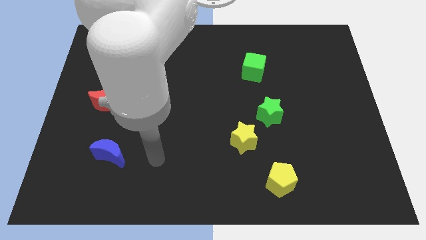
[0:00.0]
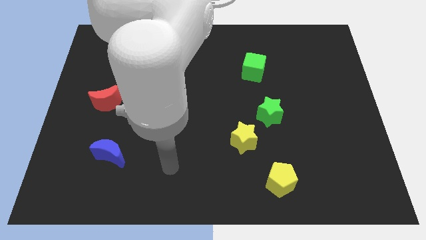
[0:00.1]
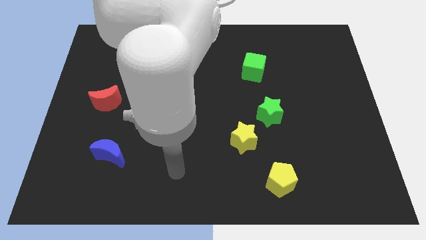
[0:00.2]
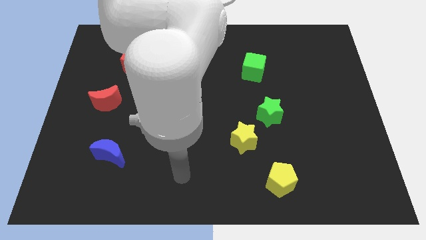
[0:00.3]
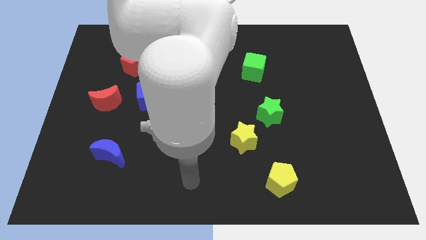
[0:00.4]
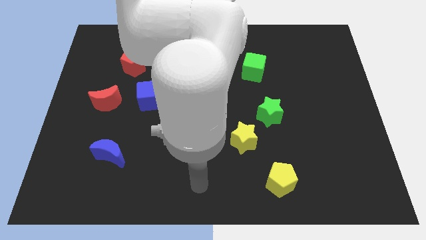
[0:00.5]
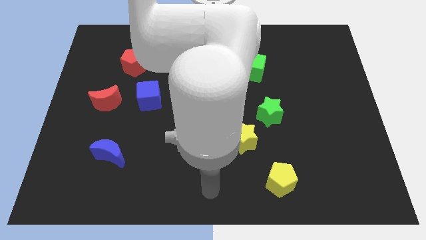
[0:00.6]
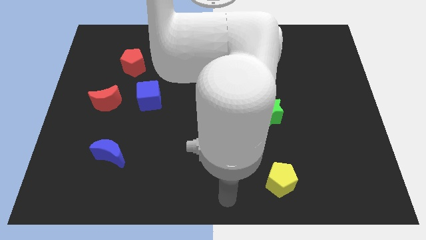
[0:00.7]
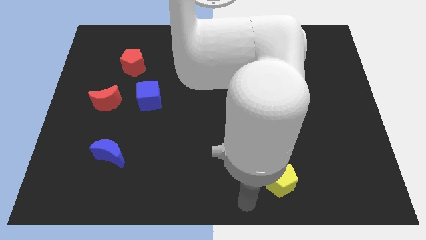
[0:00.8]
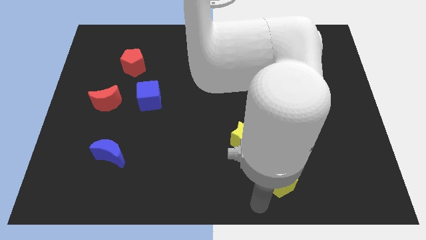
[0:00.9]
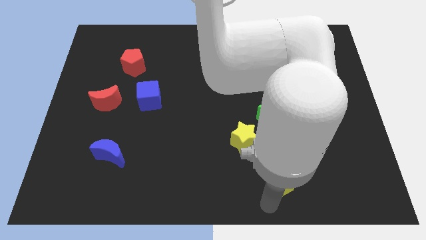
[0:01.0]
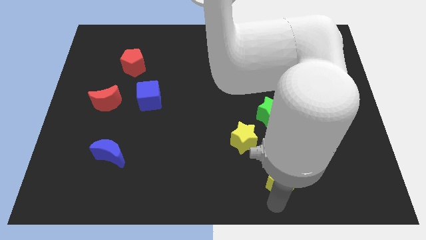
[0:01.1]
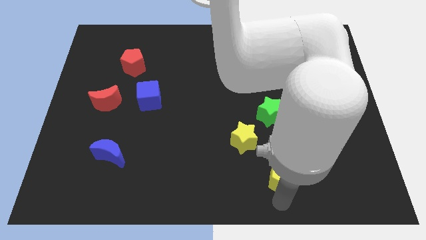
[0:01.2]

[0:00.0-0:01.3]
point your arm at the bottom of the yellow pentagon

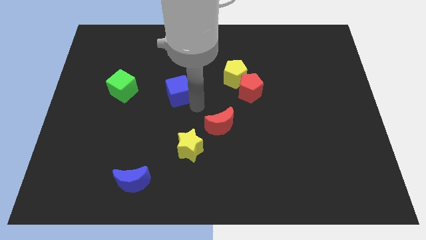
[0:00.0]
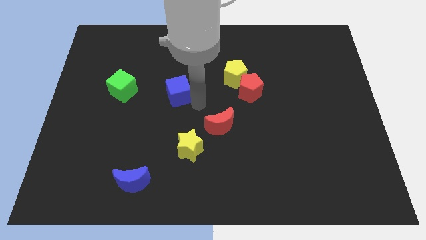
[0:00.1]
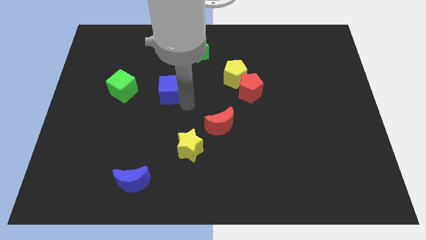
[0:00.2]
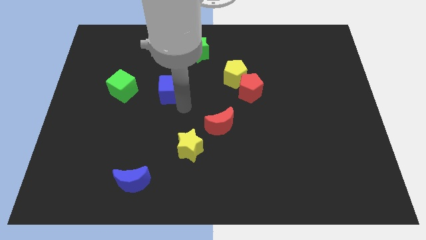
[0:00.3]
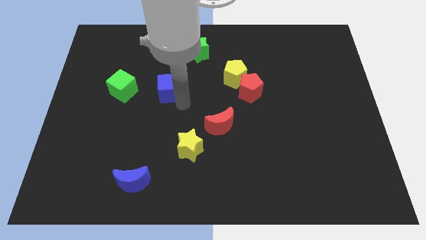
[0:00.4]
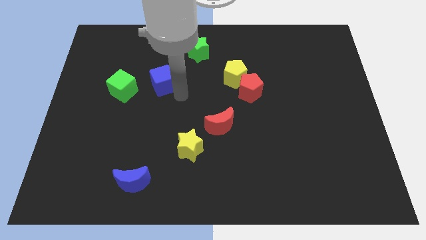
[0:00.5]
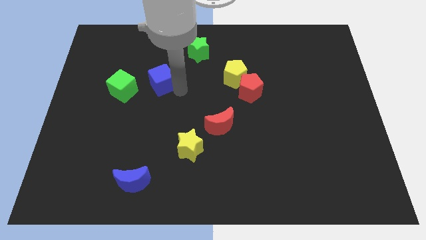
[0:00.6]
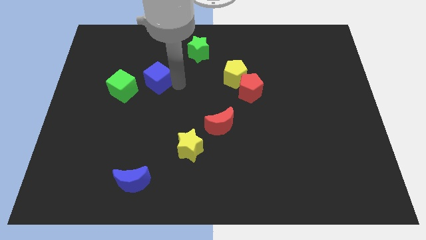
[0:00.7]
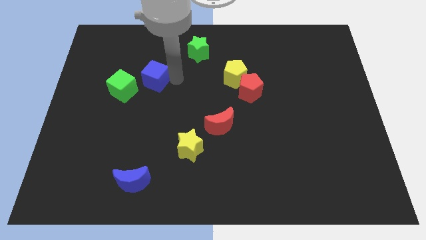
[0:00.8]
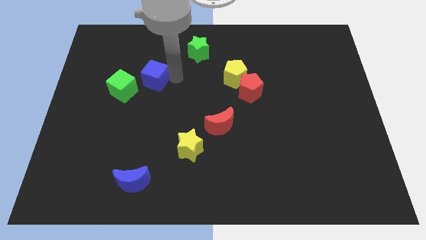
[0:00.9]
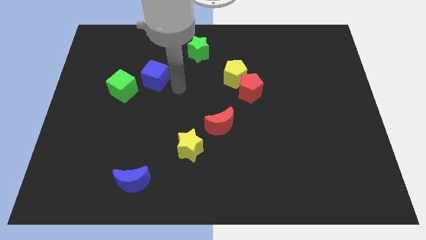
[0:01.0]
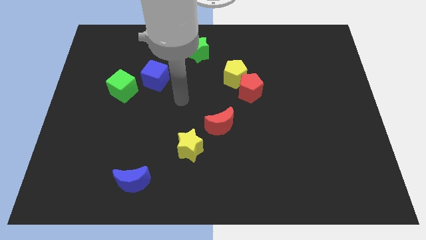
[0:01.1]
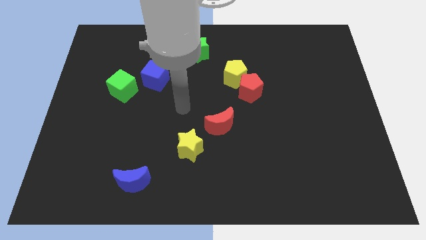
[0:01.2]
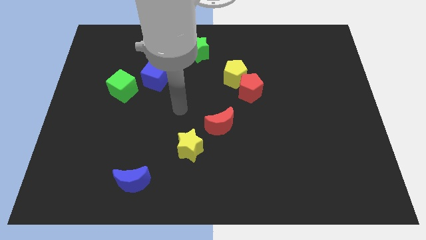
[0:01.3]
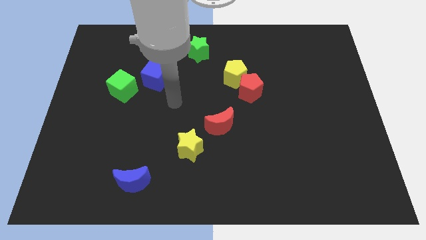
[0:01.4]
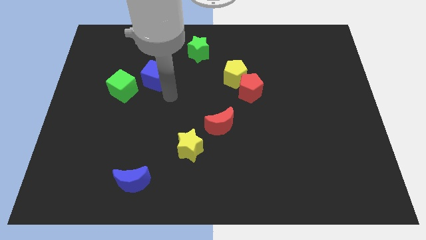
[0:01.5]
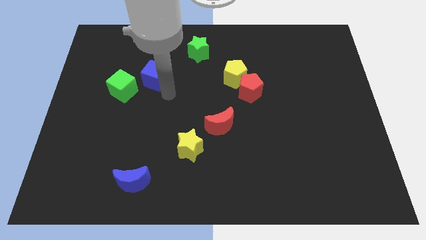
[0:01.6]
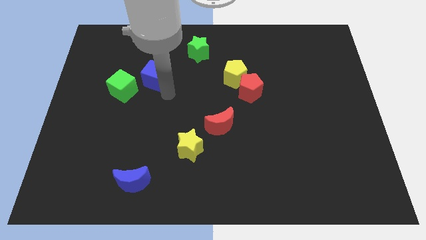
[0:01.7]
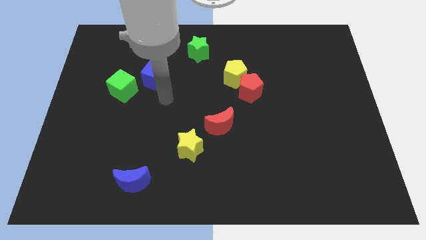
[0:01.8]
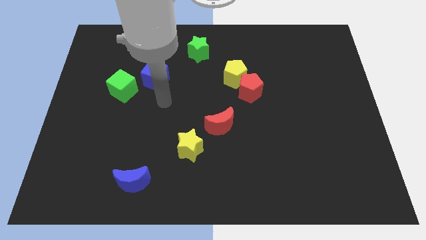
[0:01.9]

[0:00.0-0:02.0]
place the blue cube in between the green blocks

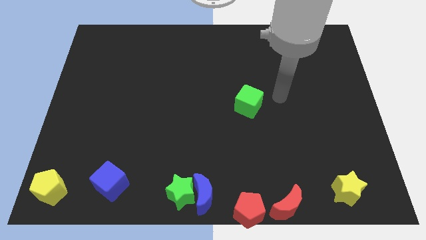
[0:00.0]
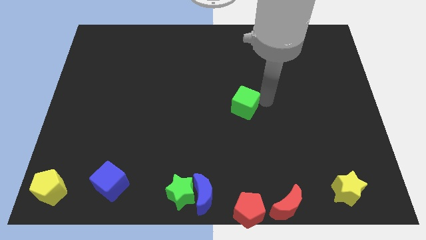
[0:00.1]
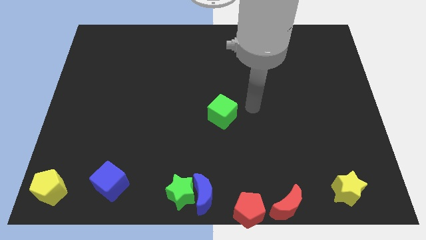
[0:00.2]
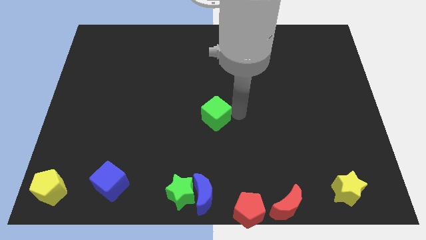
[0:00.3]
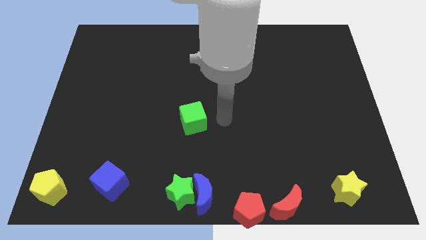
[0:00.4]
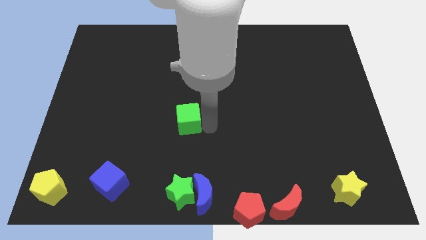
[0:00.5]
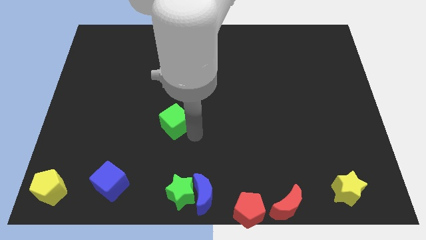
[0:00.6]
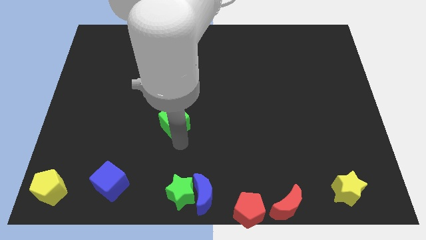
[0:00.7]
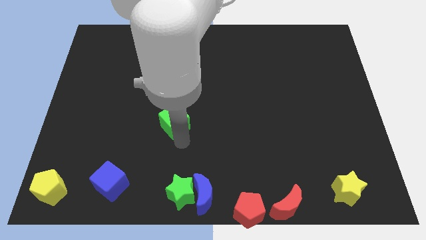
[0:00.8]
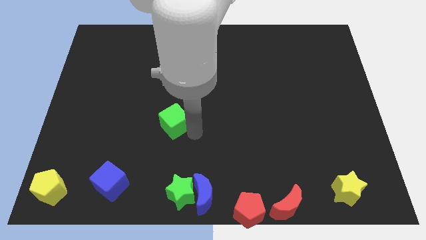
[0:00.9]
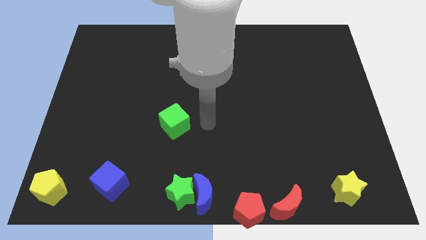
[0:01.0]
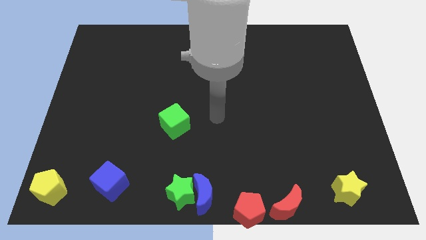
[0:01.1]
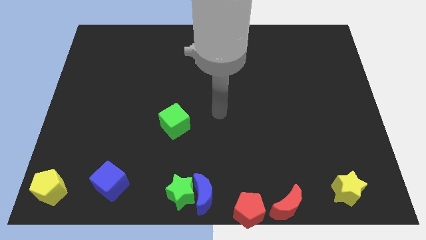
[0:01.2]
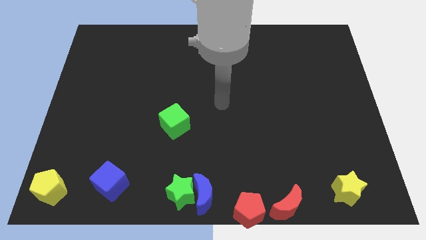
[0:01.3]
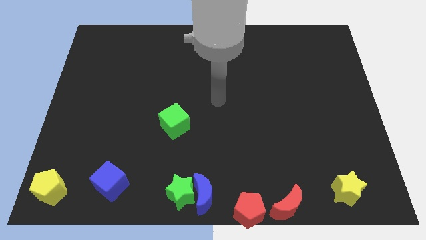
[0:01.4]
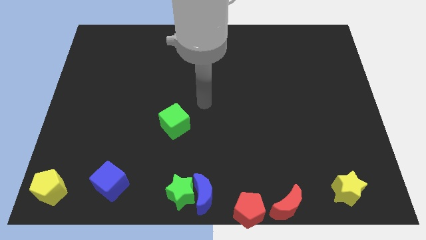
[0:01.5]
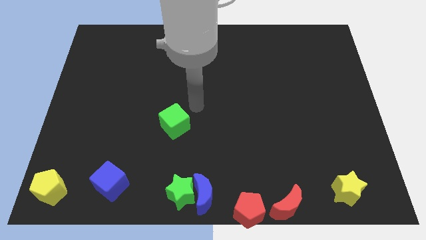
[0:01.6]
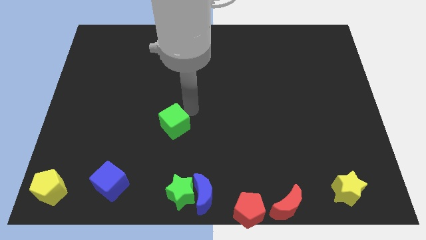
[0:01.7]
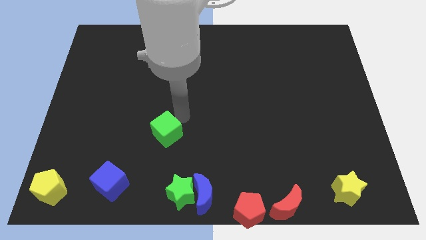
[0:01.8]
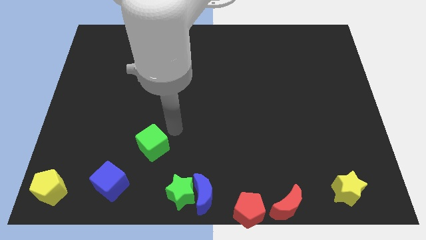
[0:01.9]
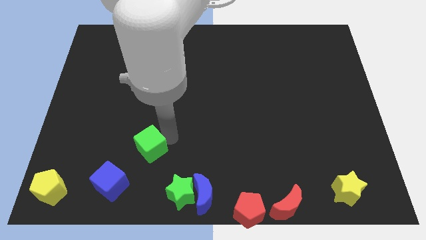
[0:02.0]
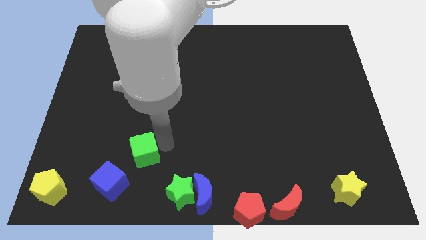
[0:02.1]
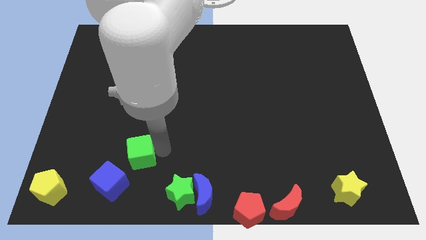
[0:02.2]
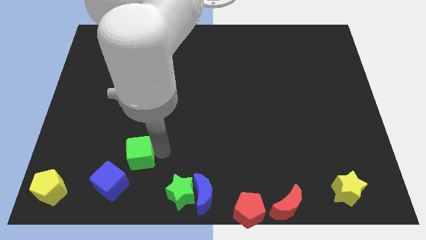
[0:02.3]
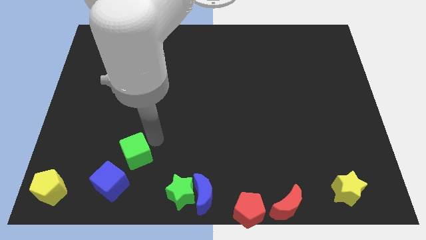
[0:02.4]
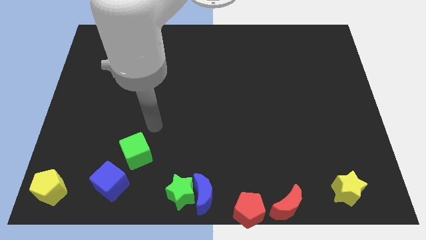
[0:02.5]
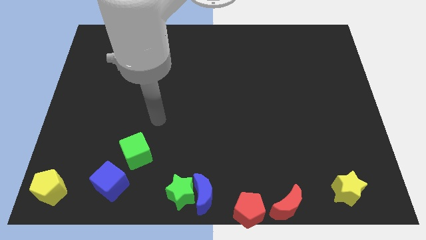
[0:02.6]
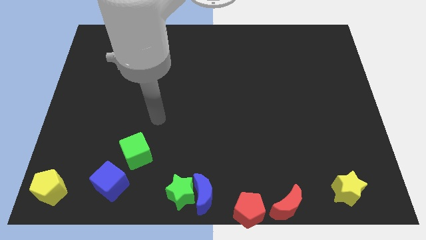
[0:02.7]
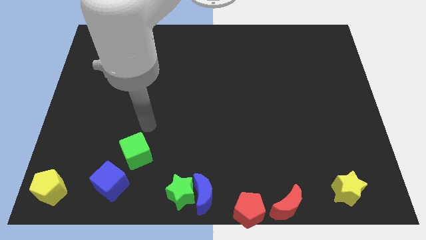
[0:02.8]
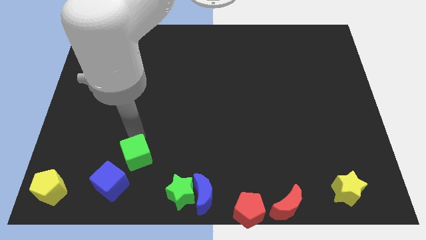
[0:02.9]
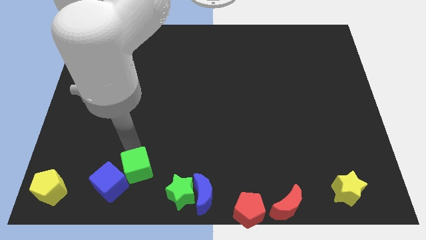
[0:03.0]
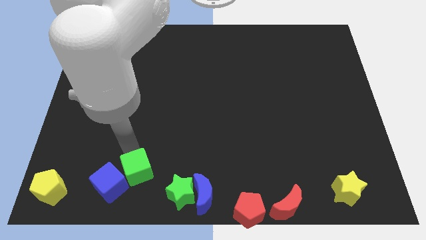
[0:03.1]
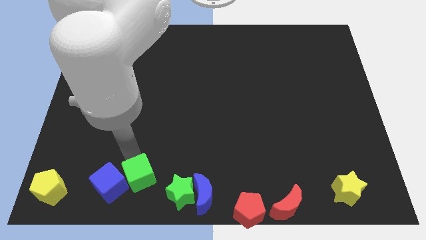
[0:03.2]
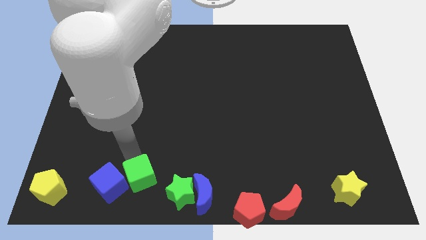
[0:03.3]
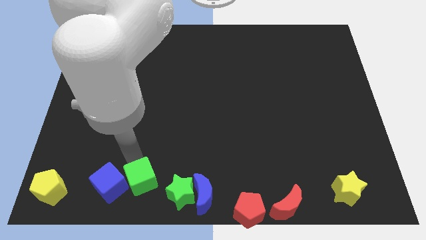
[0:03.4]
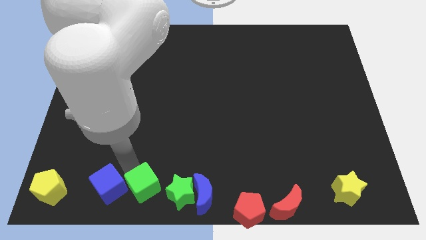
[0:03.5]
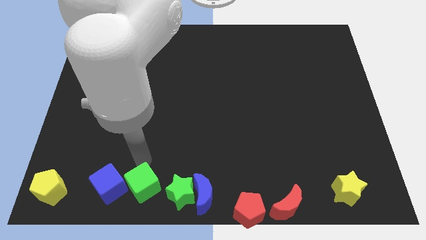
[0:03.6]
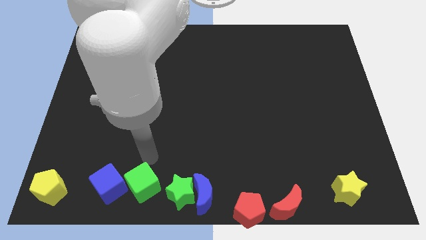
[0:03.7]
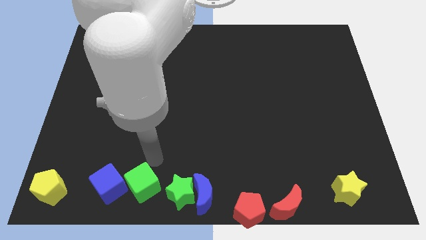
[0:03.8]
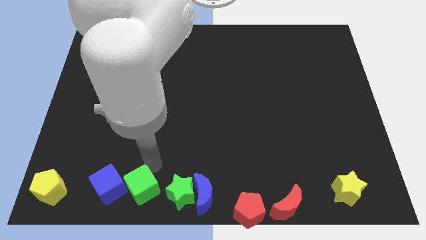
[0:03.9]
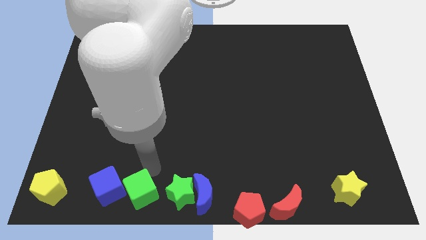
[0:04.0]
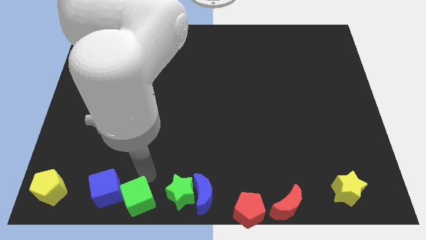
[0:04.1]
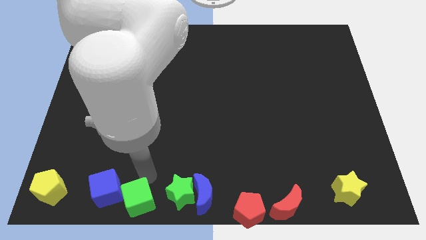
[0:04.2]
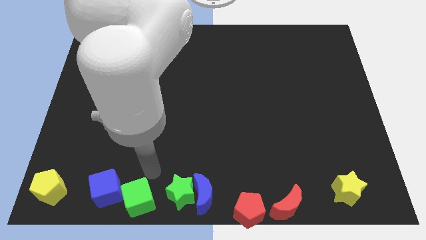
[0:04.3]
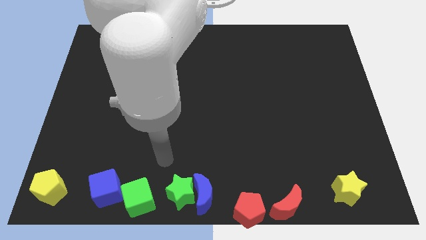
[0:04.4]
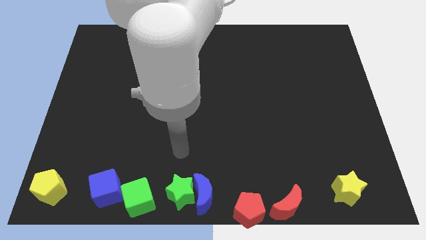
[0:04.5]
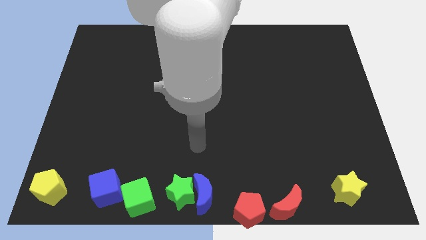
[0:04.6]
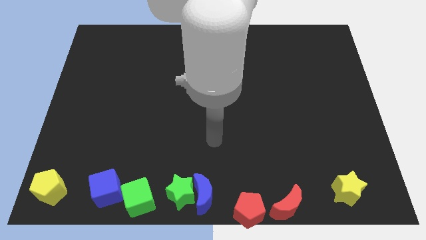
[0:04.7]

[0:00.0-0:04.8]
put the green cube in between the blue cube abd green star

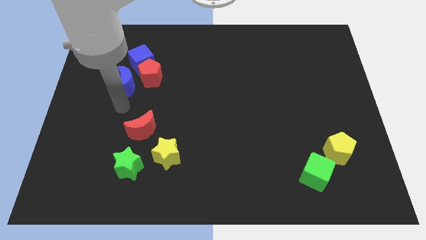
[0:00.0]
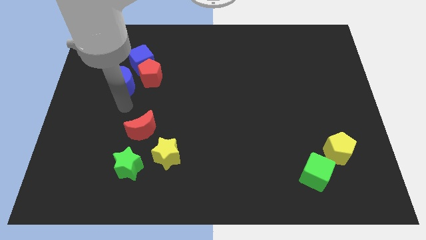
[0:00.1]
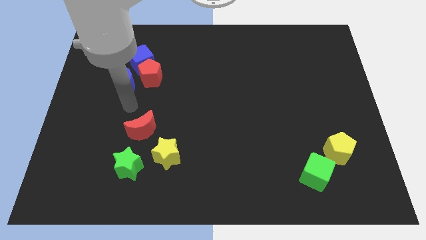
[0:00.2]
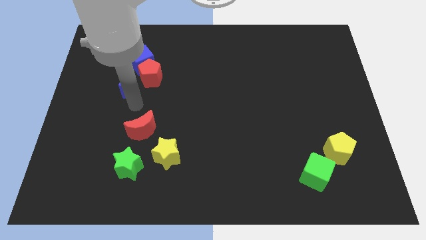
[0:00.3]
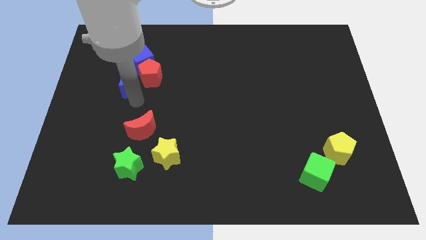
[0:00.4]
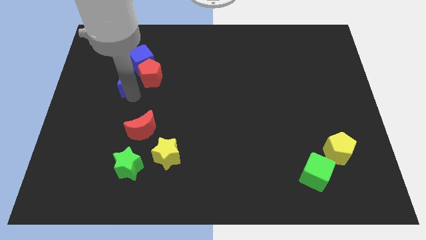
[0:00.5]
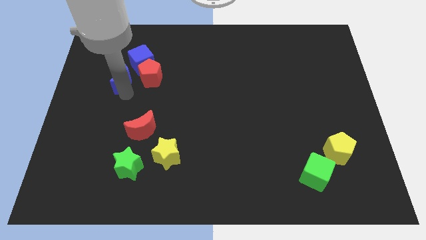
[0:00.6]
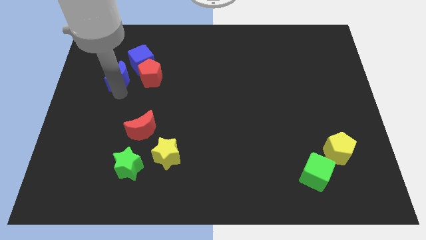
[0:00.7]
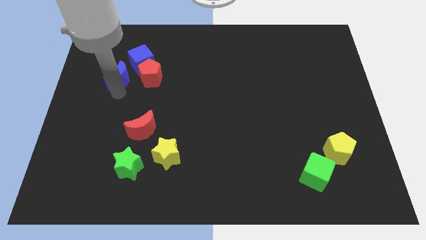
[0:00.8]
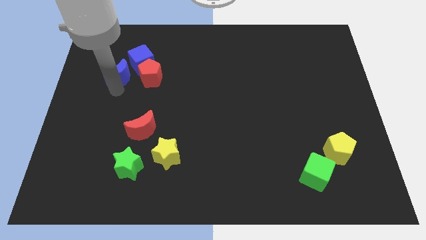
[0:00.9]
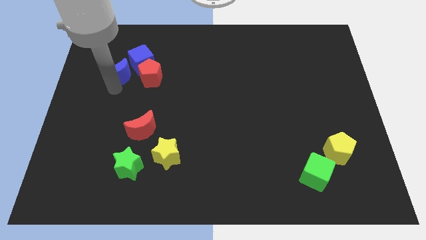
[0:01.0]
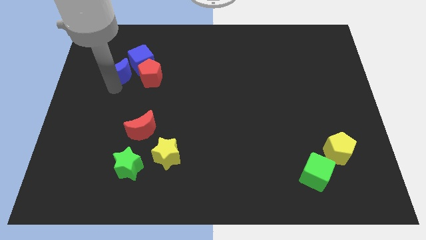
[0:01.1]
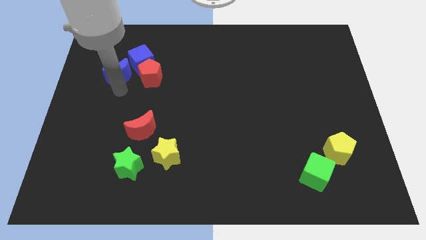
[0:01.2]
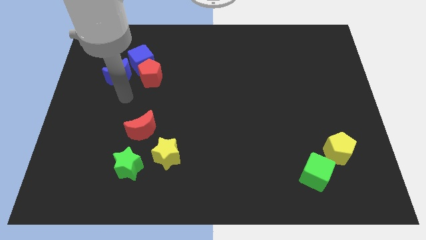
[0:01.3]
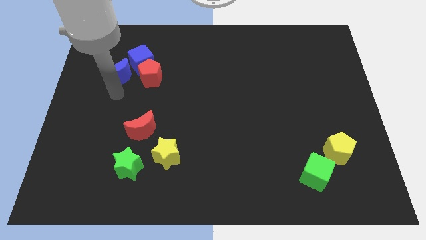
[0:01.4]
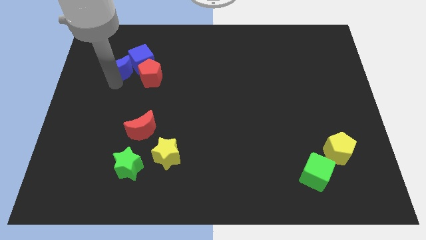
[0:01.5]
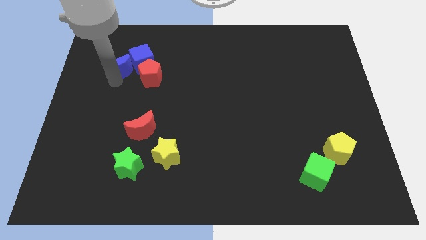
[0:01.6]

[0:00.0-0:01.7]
push the blue crescent to the left of the blue cube
